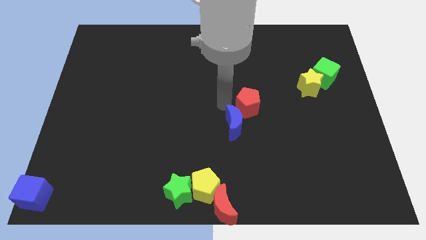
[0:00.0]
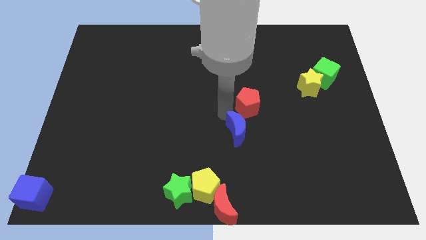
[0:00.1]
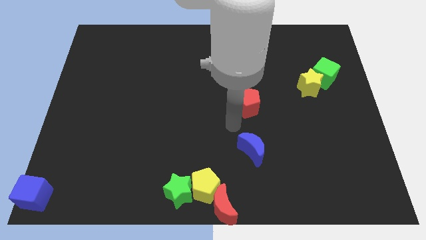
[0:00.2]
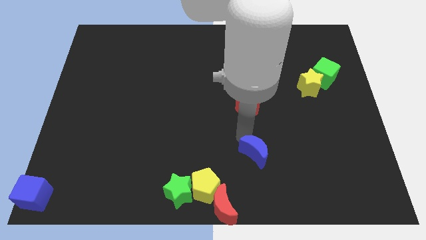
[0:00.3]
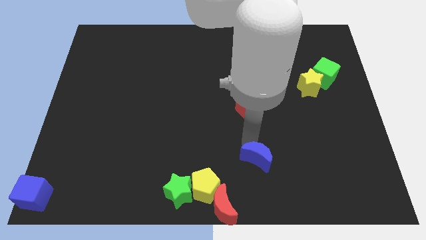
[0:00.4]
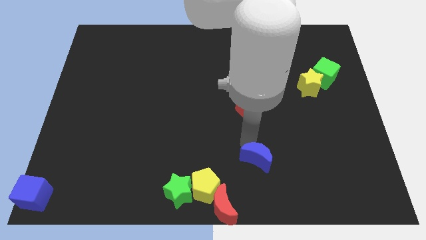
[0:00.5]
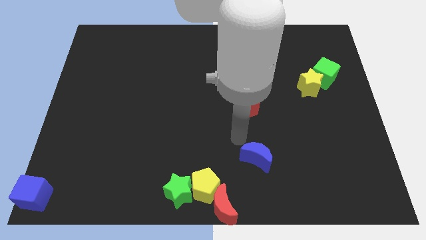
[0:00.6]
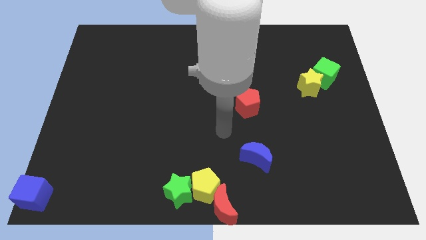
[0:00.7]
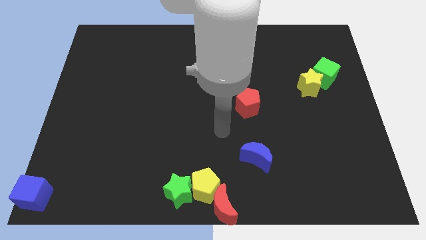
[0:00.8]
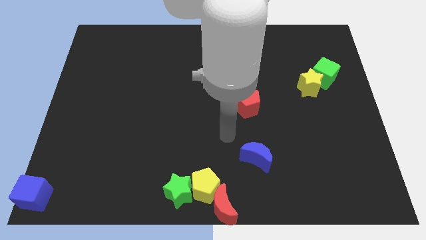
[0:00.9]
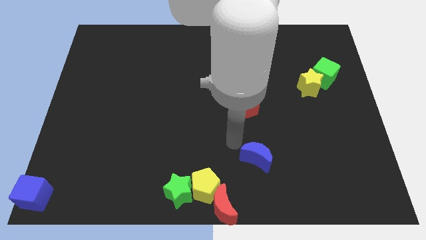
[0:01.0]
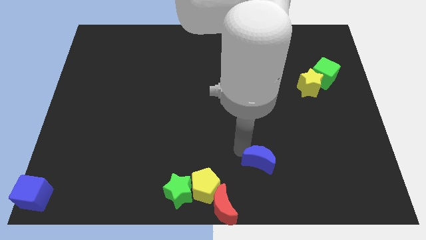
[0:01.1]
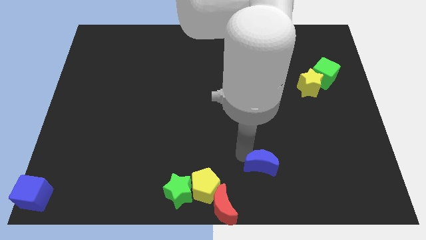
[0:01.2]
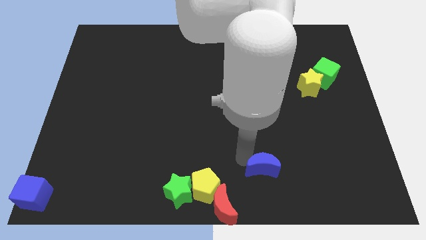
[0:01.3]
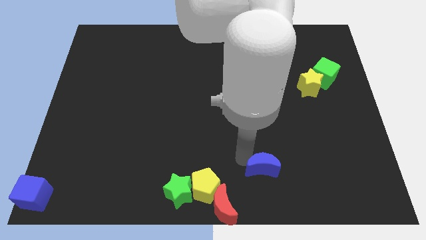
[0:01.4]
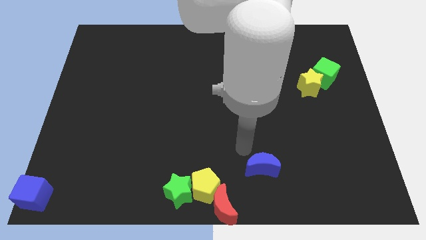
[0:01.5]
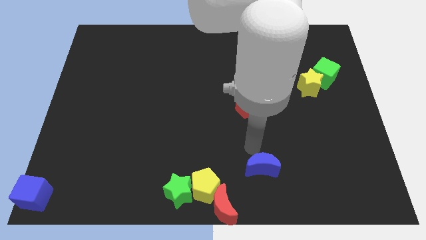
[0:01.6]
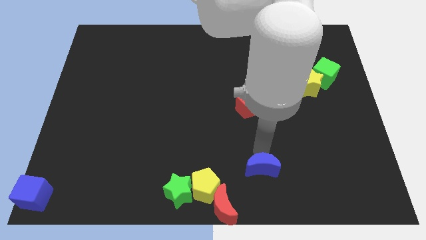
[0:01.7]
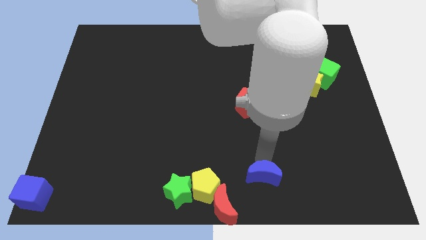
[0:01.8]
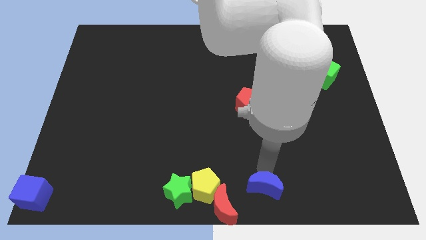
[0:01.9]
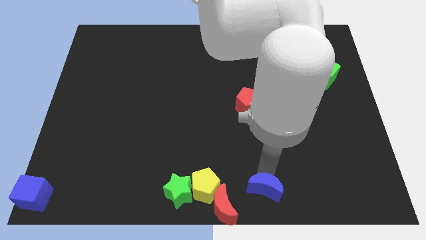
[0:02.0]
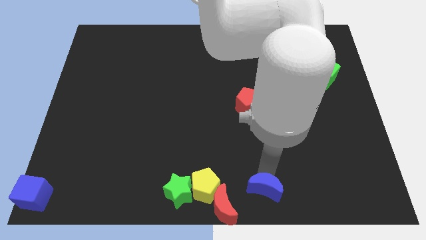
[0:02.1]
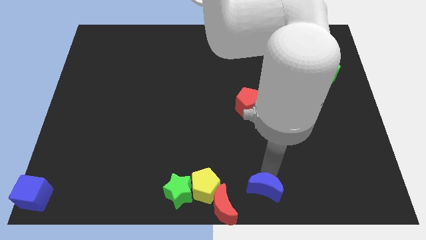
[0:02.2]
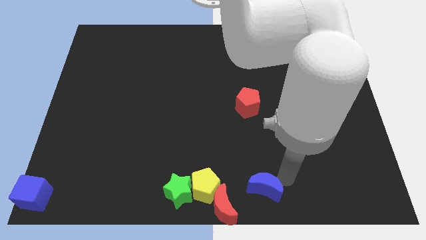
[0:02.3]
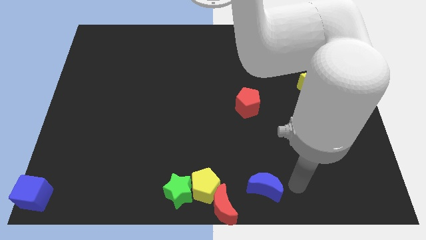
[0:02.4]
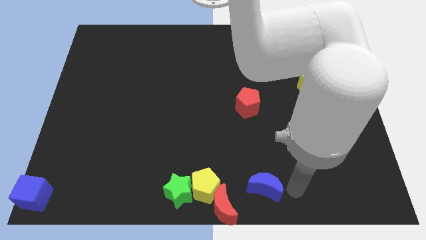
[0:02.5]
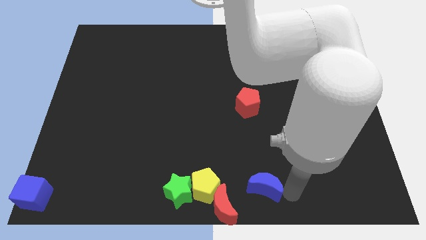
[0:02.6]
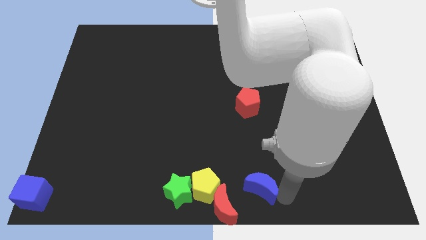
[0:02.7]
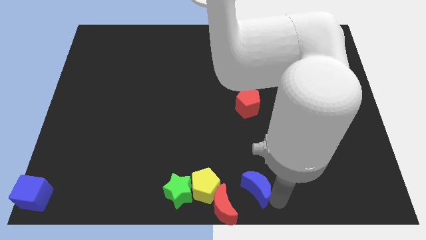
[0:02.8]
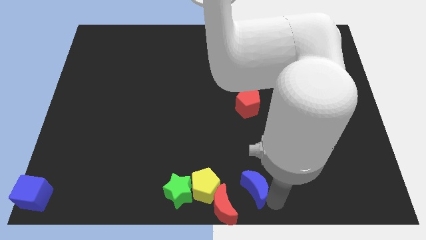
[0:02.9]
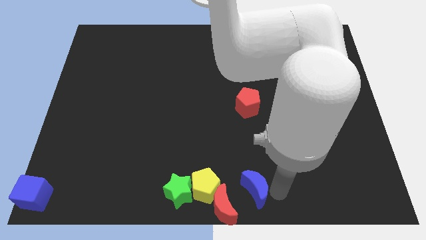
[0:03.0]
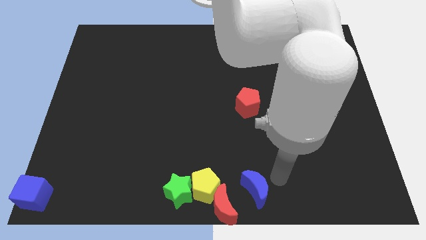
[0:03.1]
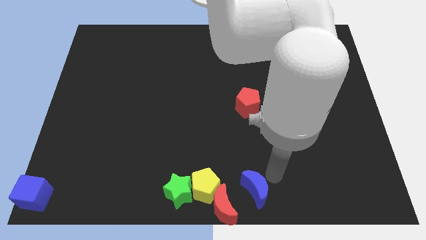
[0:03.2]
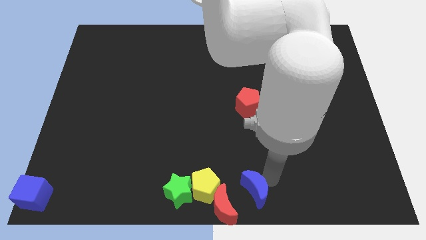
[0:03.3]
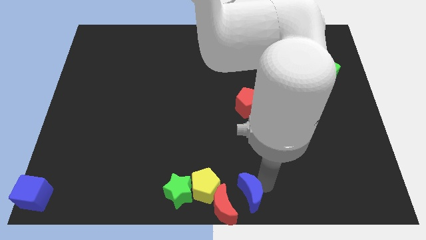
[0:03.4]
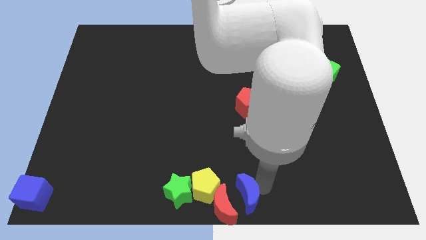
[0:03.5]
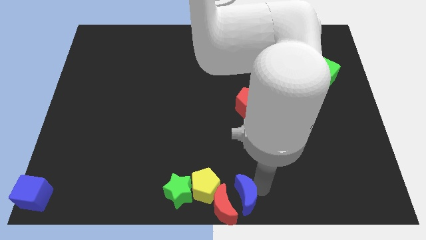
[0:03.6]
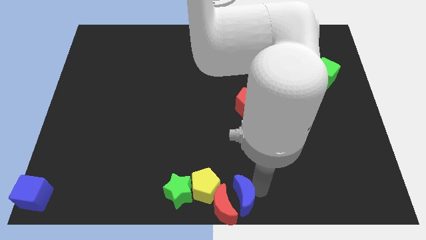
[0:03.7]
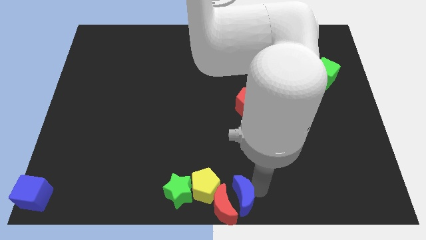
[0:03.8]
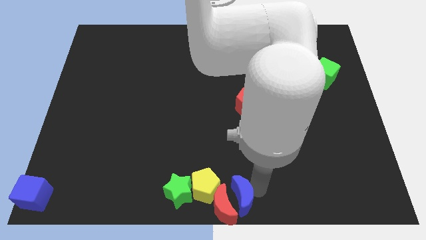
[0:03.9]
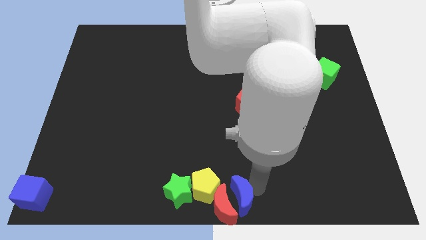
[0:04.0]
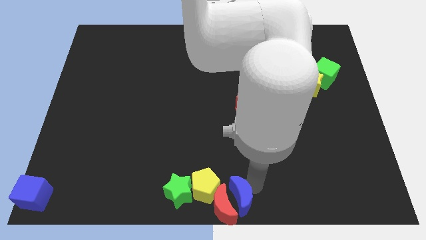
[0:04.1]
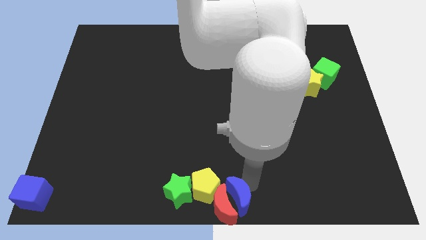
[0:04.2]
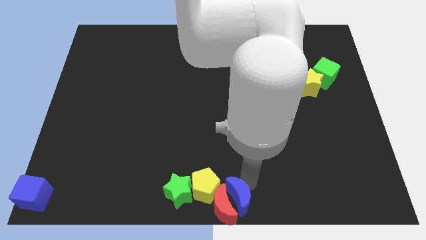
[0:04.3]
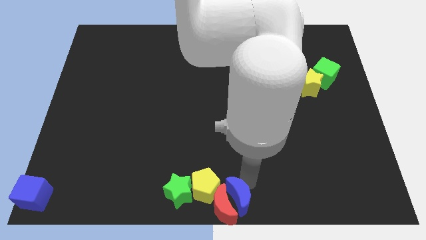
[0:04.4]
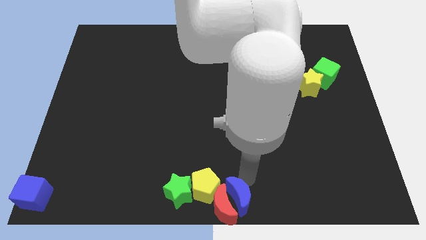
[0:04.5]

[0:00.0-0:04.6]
move the blue crescent towards the right of the red crescent

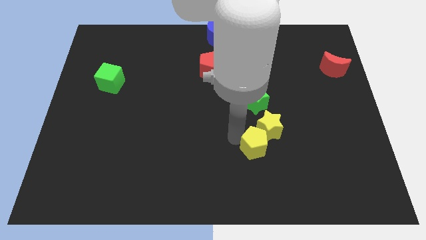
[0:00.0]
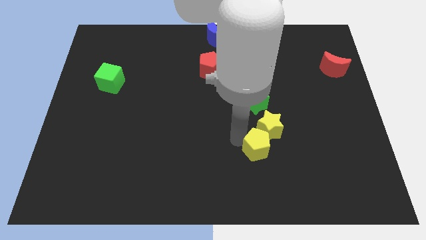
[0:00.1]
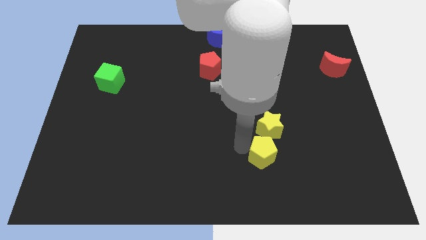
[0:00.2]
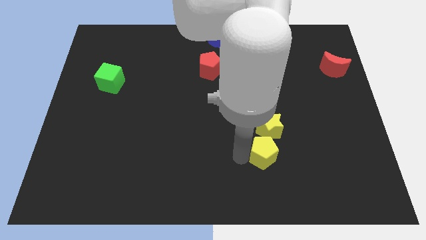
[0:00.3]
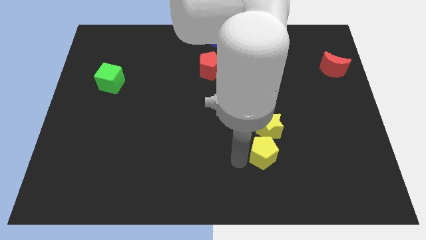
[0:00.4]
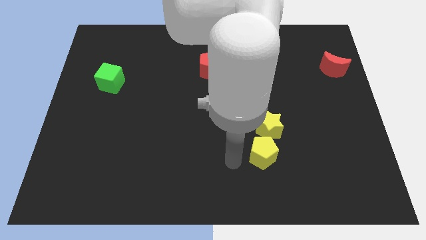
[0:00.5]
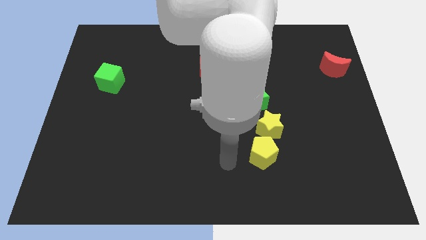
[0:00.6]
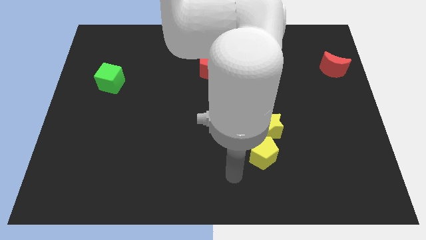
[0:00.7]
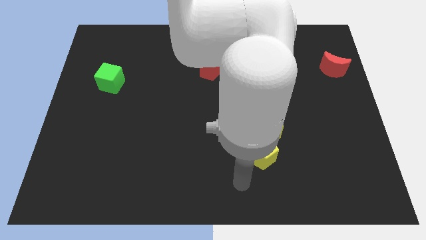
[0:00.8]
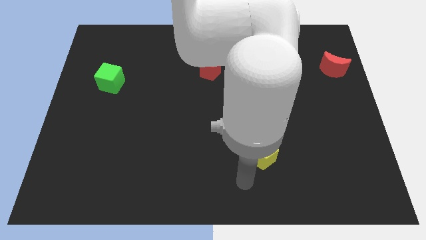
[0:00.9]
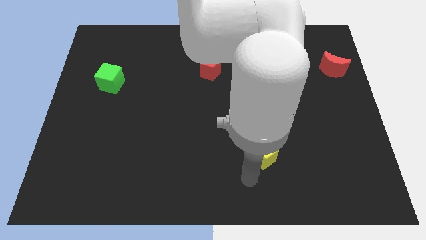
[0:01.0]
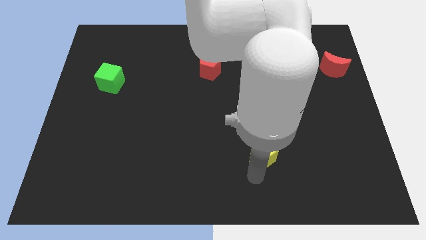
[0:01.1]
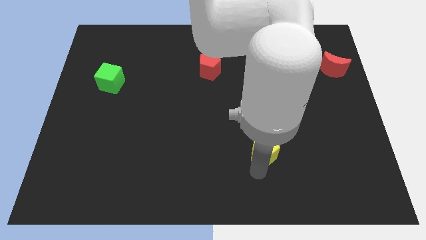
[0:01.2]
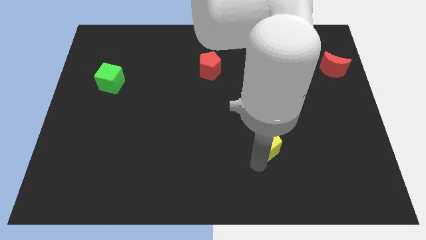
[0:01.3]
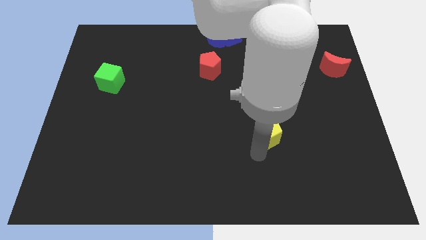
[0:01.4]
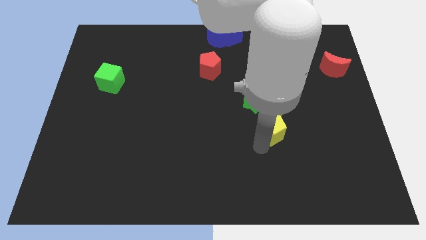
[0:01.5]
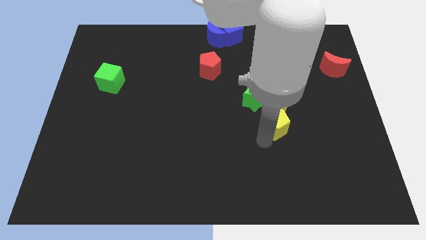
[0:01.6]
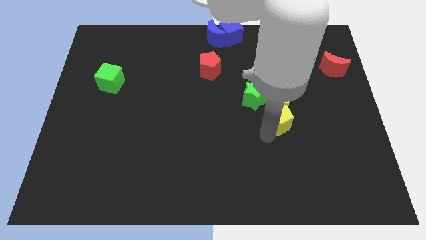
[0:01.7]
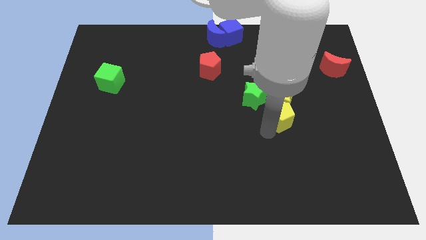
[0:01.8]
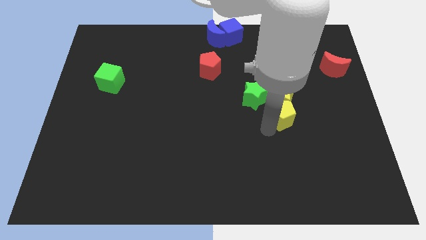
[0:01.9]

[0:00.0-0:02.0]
push the yellow pentagon into the yellow star

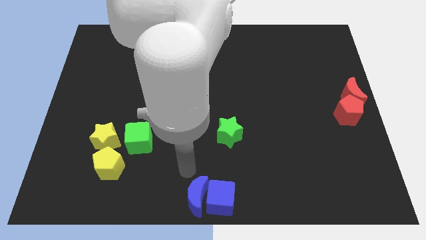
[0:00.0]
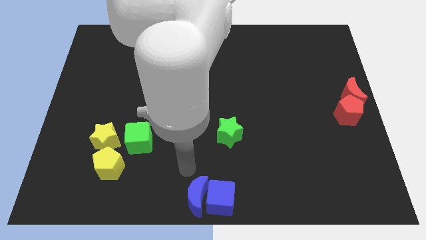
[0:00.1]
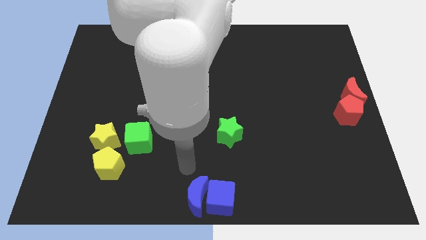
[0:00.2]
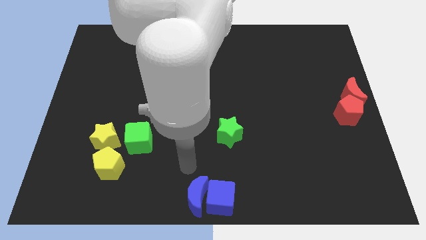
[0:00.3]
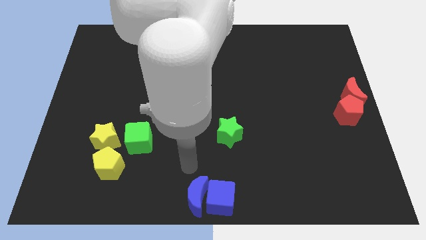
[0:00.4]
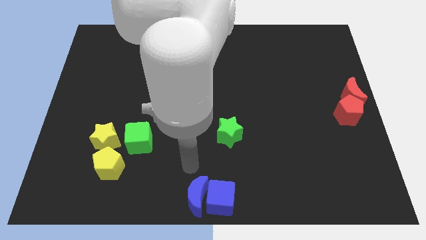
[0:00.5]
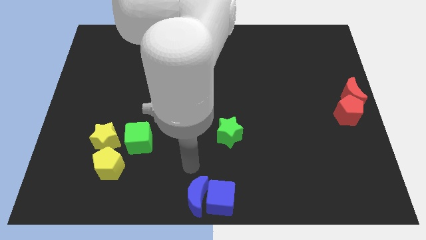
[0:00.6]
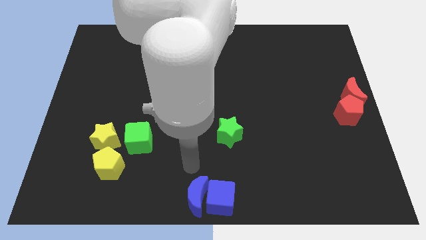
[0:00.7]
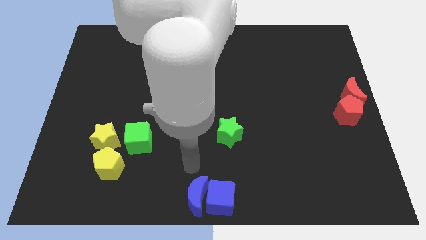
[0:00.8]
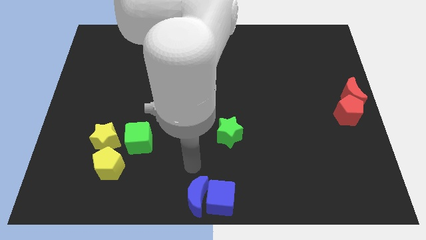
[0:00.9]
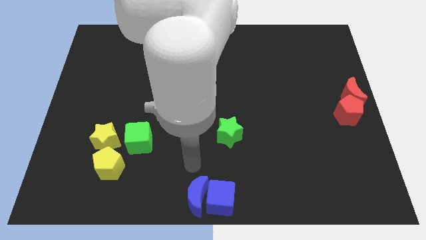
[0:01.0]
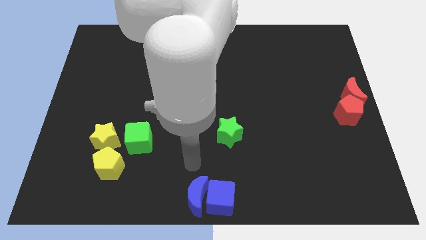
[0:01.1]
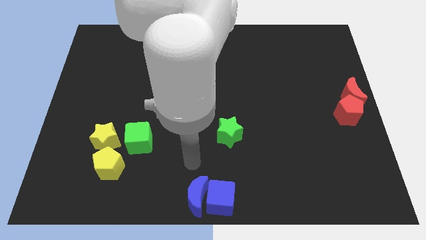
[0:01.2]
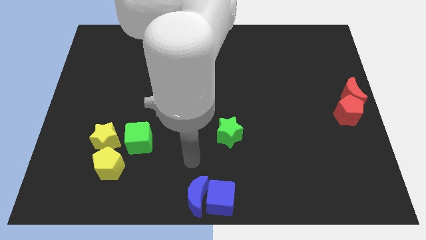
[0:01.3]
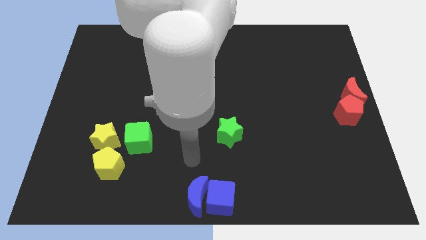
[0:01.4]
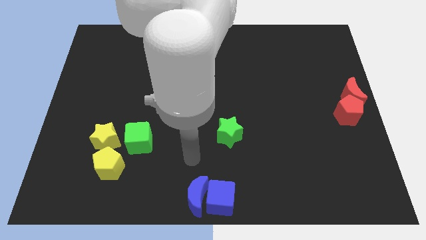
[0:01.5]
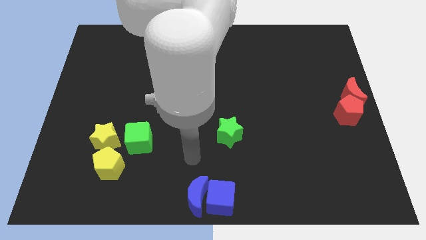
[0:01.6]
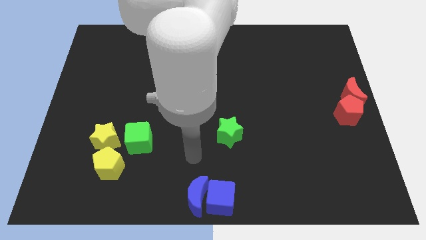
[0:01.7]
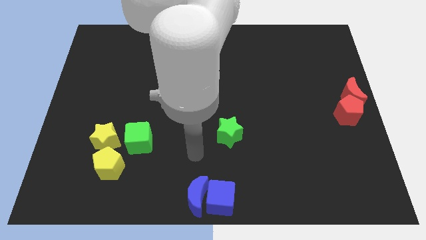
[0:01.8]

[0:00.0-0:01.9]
move the arm away from the blue moon

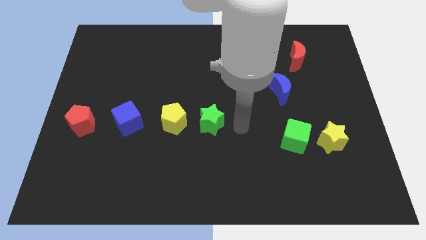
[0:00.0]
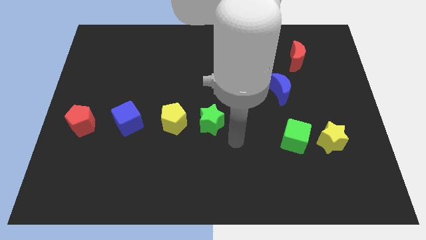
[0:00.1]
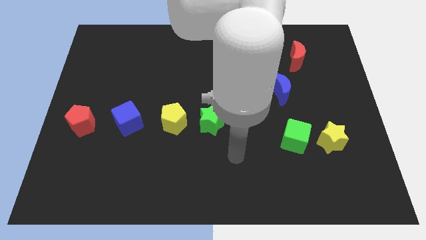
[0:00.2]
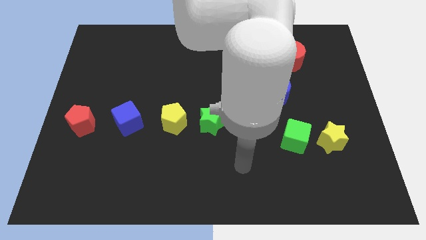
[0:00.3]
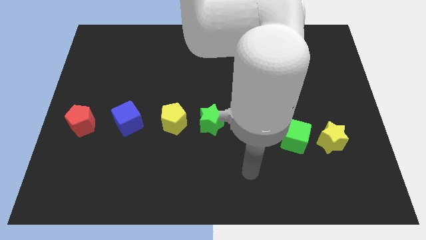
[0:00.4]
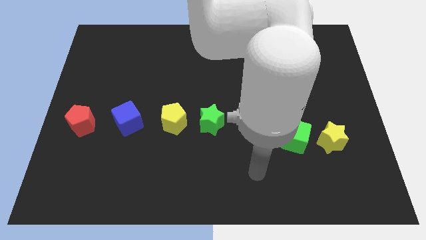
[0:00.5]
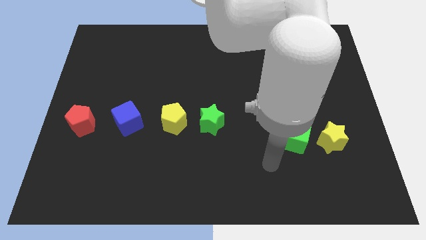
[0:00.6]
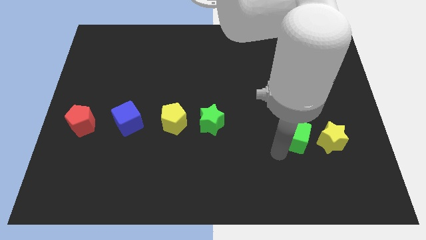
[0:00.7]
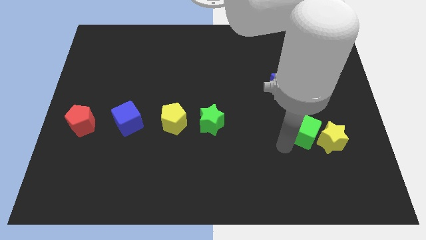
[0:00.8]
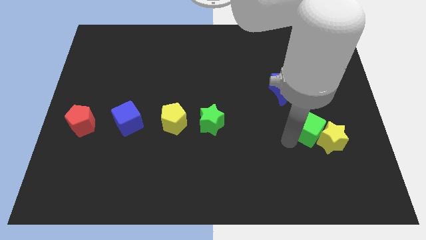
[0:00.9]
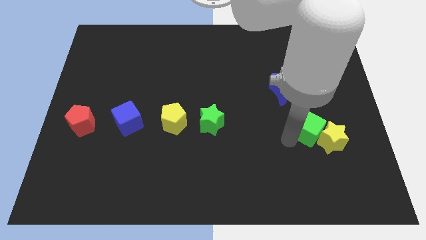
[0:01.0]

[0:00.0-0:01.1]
move the green cube close to the yellow star
